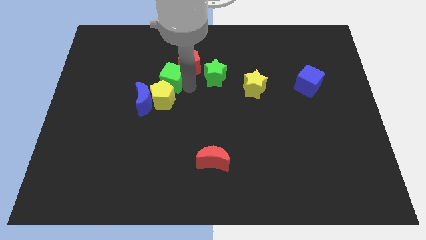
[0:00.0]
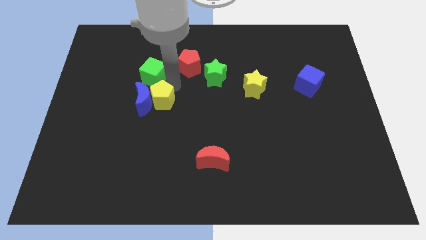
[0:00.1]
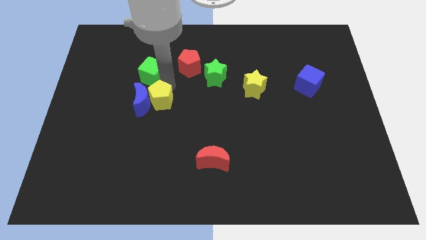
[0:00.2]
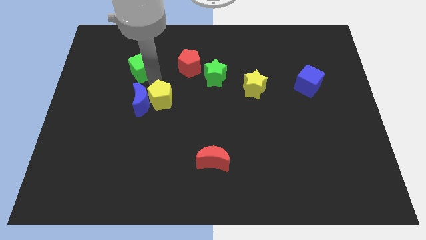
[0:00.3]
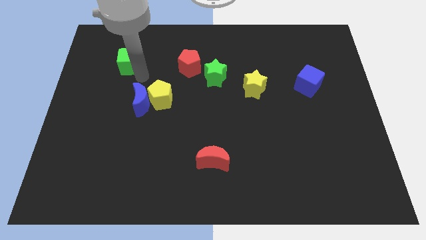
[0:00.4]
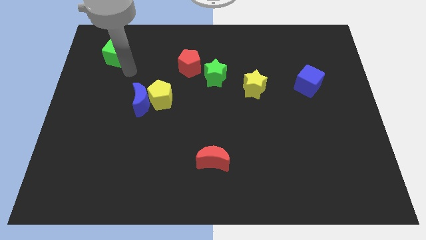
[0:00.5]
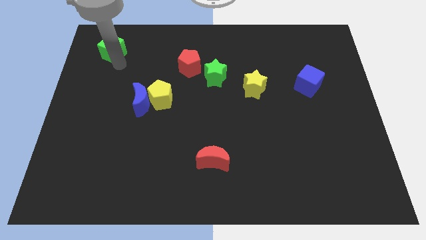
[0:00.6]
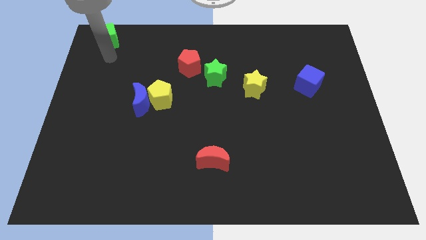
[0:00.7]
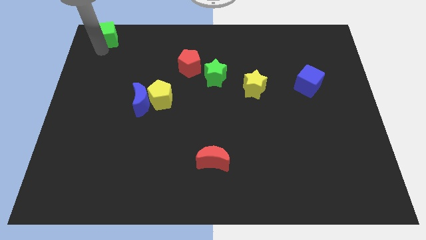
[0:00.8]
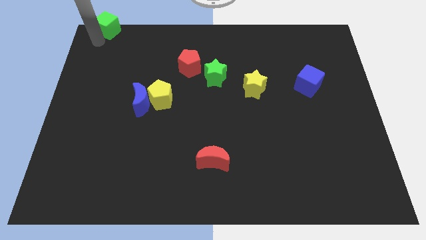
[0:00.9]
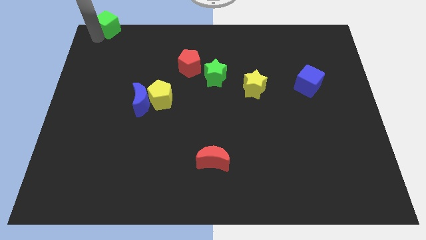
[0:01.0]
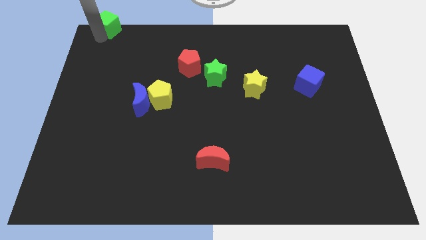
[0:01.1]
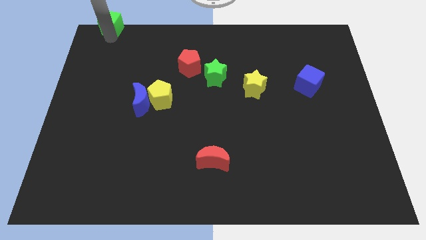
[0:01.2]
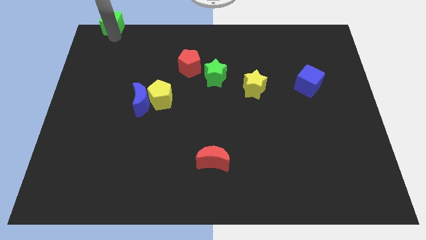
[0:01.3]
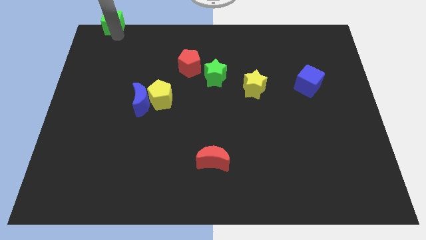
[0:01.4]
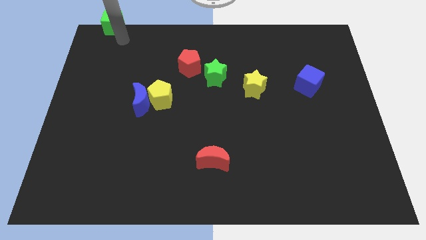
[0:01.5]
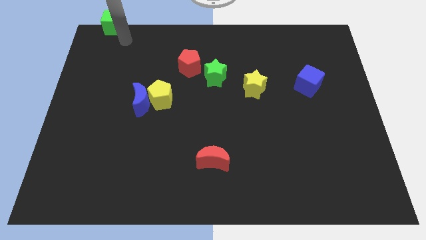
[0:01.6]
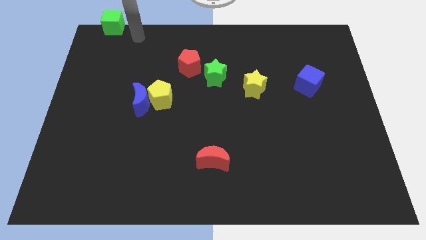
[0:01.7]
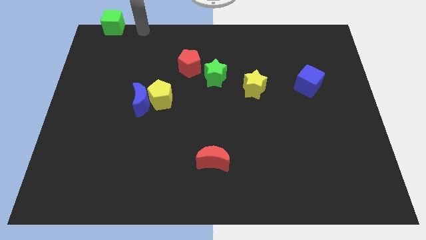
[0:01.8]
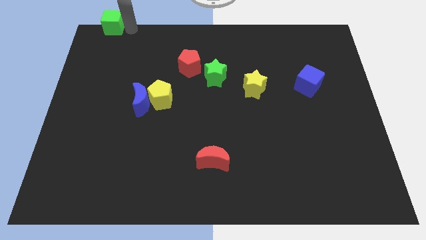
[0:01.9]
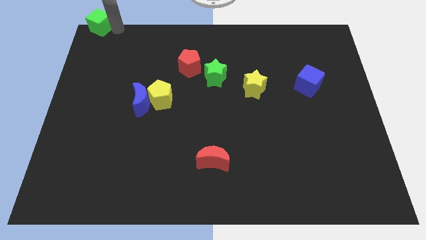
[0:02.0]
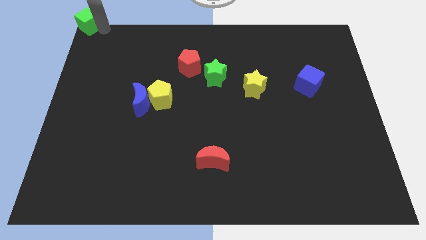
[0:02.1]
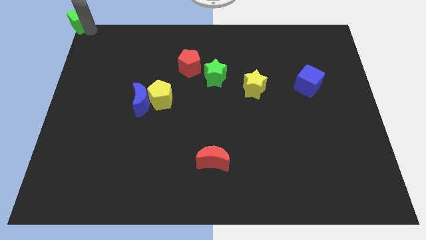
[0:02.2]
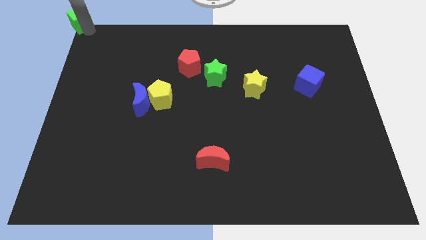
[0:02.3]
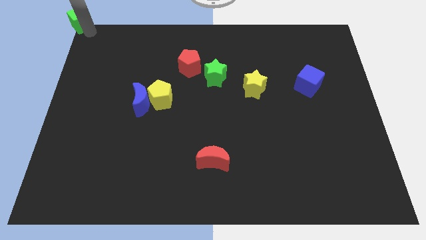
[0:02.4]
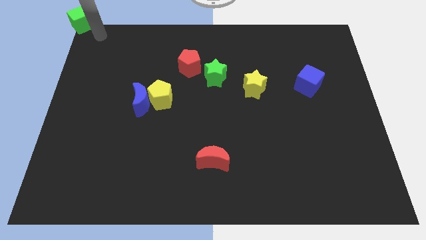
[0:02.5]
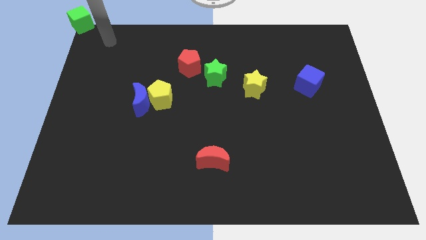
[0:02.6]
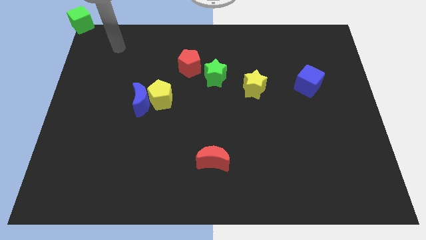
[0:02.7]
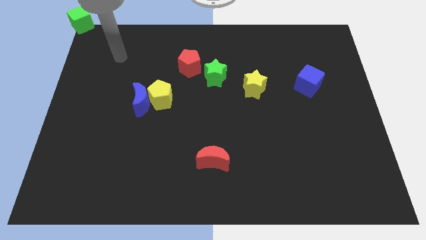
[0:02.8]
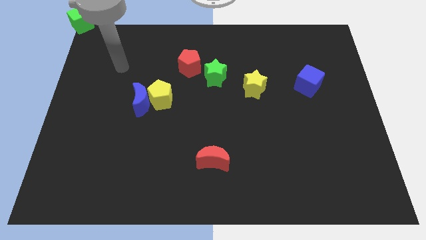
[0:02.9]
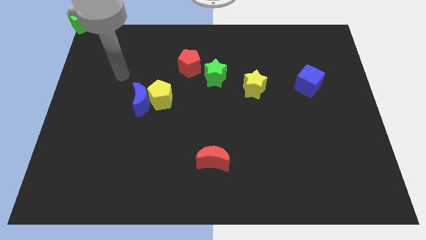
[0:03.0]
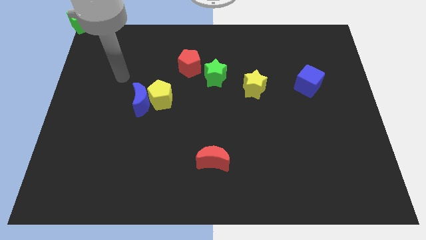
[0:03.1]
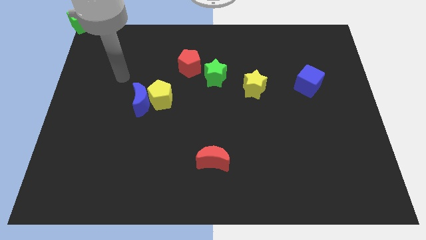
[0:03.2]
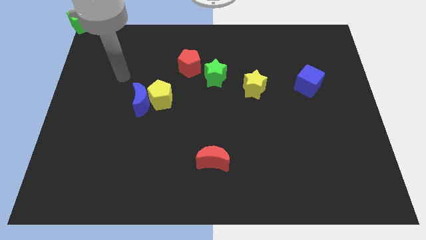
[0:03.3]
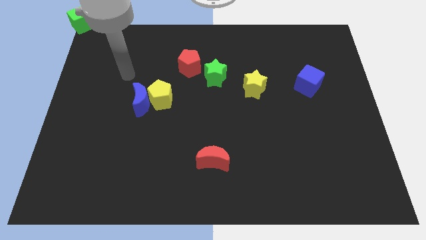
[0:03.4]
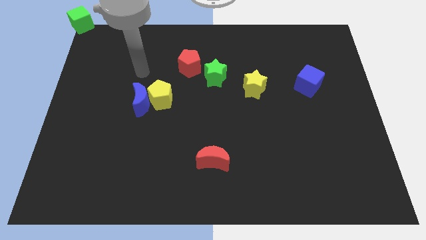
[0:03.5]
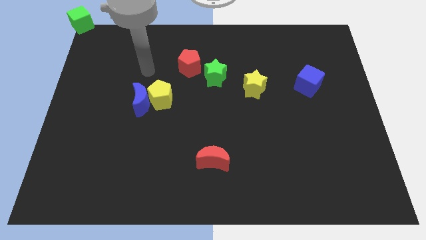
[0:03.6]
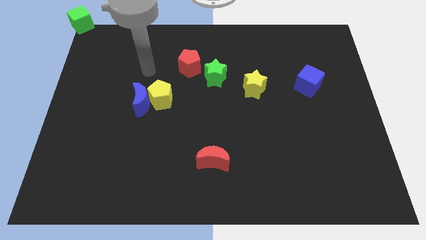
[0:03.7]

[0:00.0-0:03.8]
push the green cube to the top left corner of the board

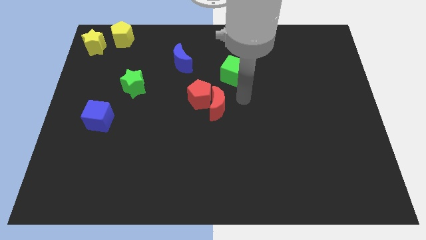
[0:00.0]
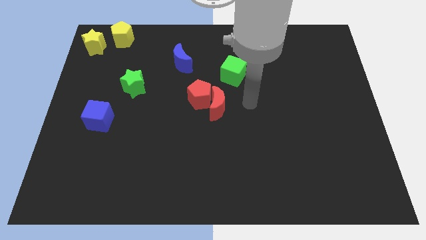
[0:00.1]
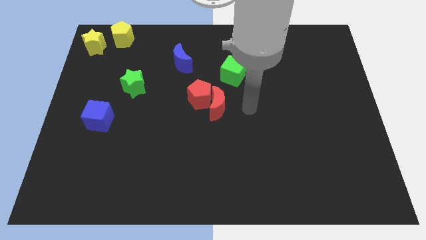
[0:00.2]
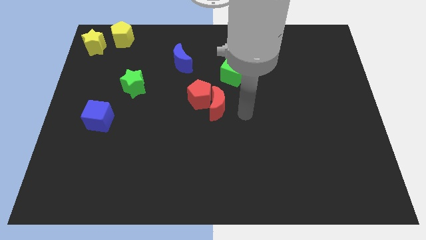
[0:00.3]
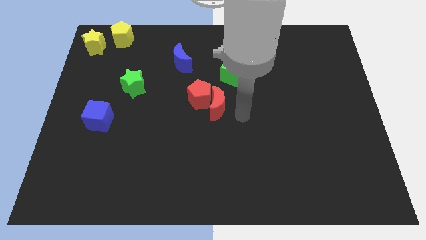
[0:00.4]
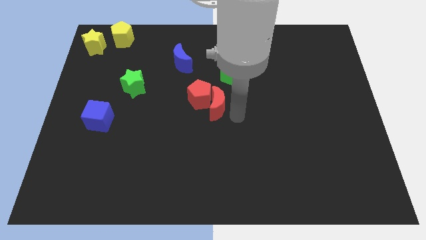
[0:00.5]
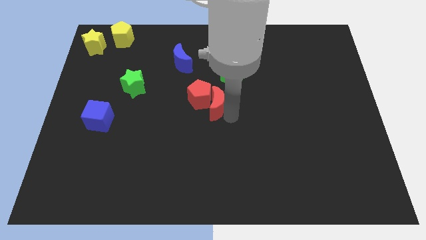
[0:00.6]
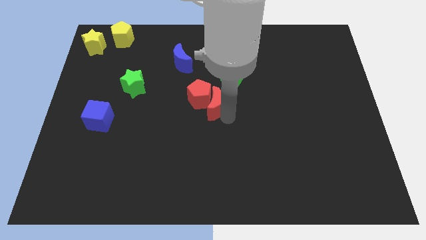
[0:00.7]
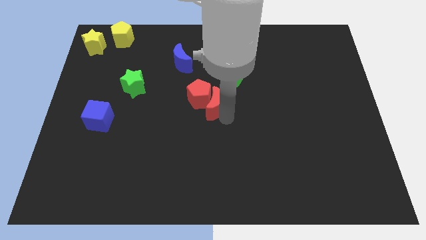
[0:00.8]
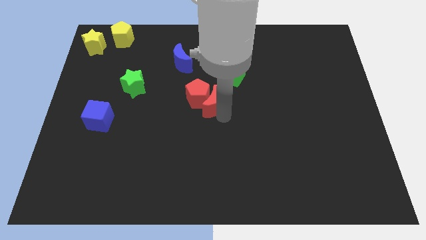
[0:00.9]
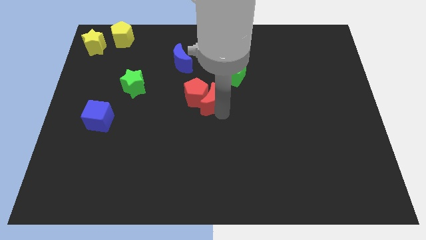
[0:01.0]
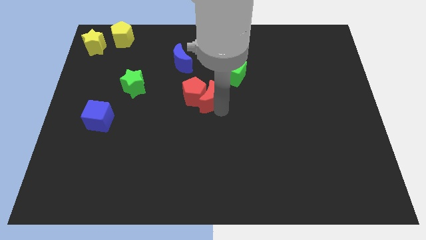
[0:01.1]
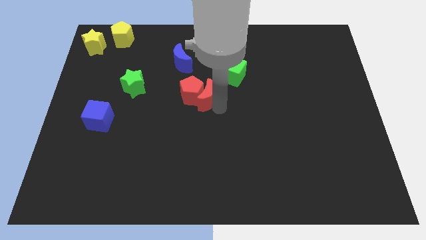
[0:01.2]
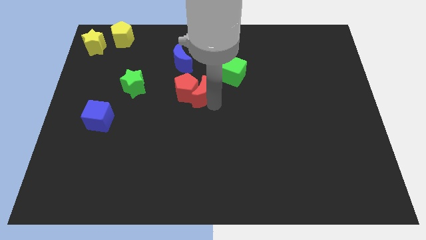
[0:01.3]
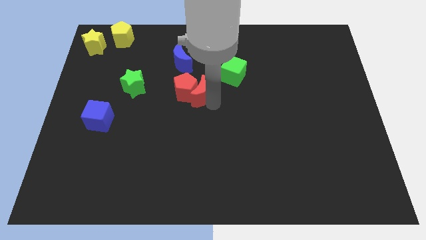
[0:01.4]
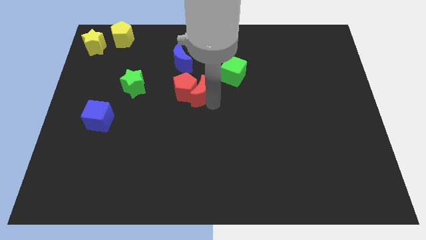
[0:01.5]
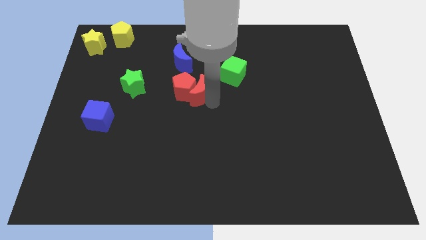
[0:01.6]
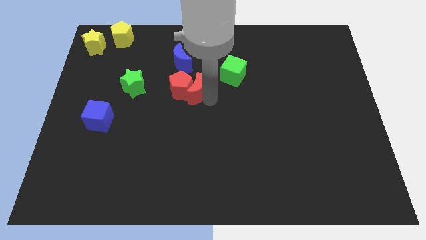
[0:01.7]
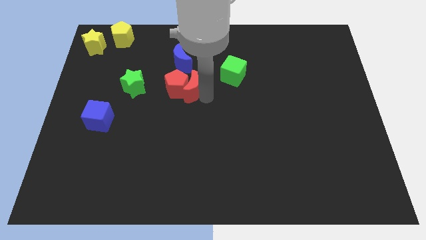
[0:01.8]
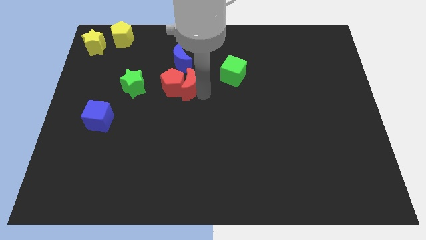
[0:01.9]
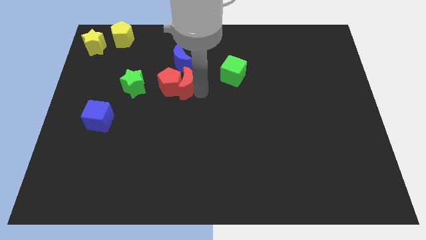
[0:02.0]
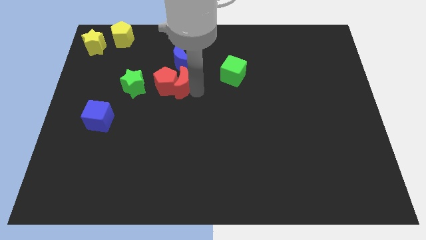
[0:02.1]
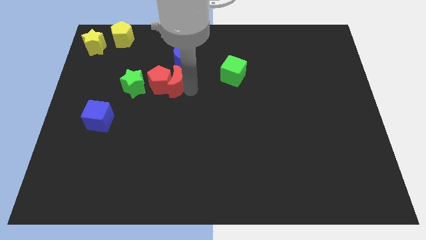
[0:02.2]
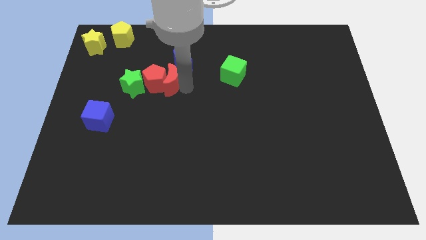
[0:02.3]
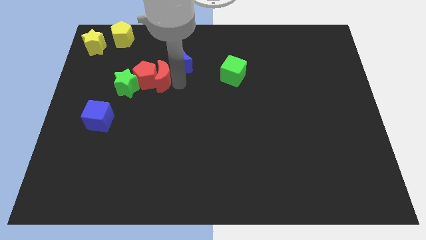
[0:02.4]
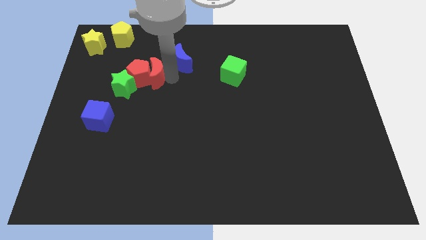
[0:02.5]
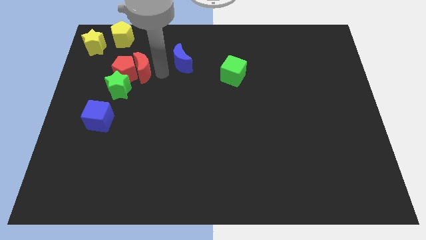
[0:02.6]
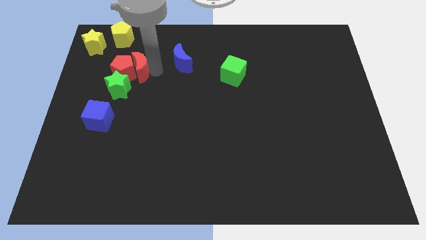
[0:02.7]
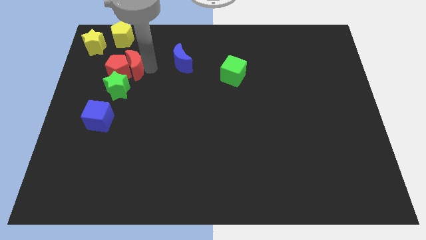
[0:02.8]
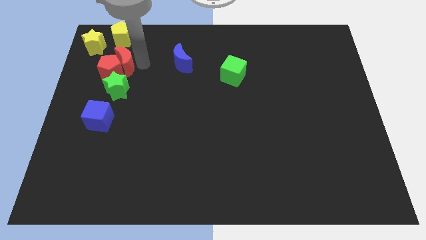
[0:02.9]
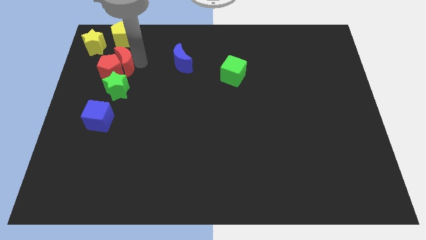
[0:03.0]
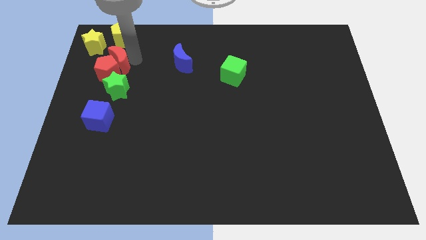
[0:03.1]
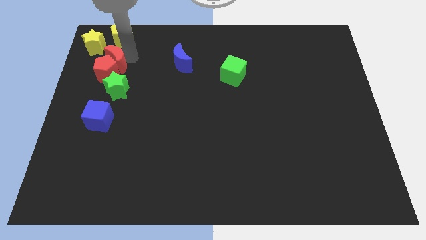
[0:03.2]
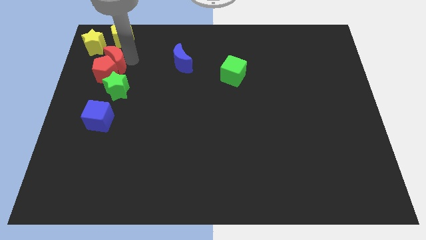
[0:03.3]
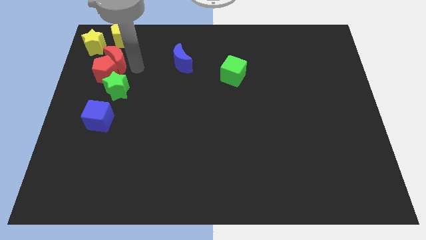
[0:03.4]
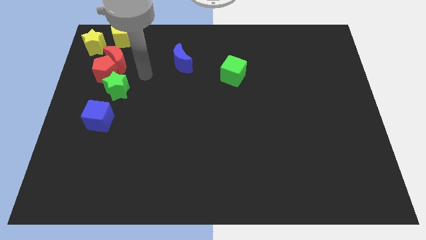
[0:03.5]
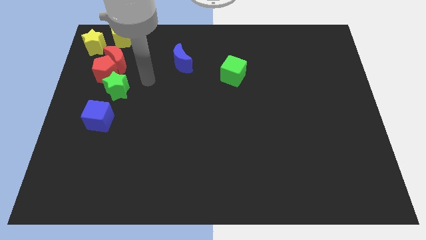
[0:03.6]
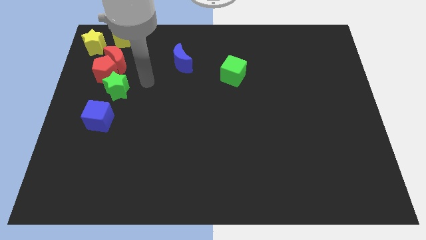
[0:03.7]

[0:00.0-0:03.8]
place the red blocks between the yellow and green star

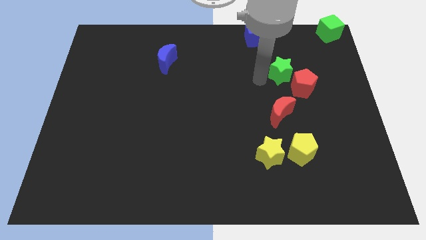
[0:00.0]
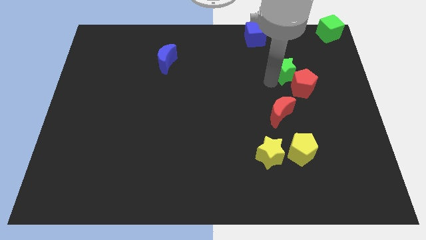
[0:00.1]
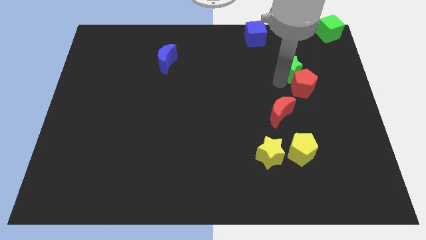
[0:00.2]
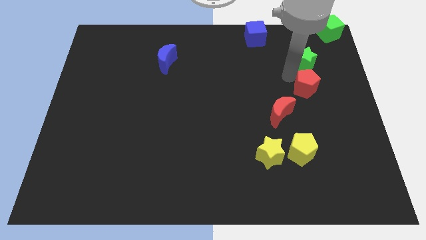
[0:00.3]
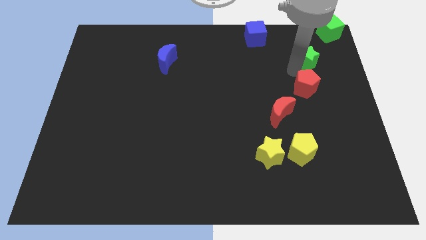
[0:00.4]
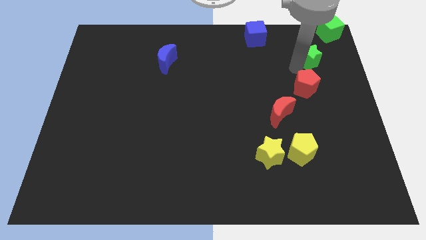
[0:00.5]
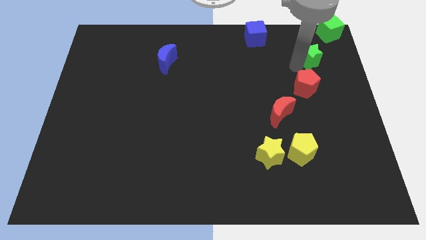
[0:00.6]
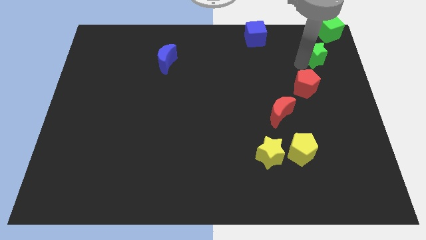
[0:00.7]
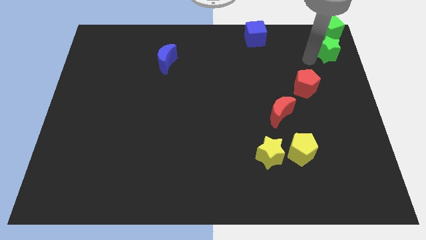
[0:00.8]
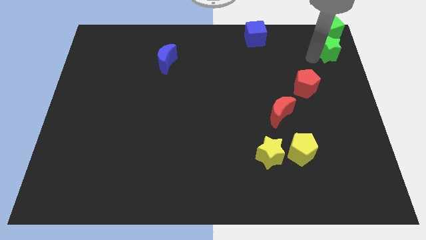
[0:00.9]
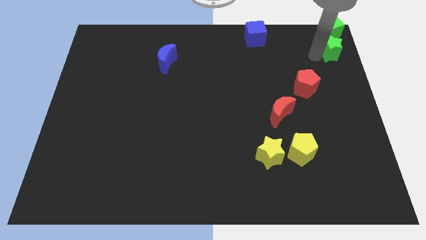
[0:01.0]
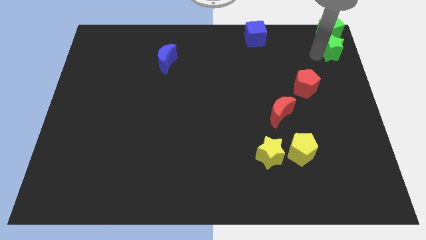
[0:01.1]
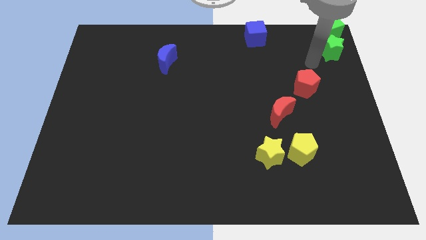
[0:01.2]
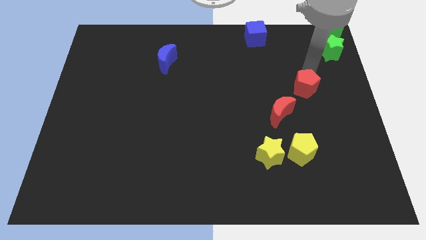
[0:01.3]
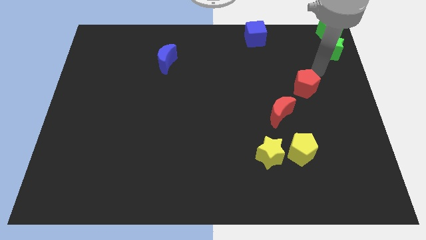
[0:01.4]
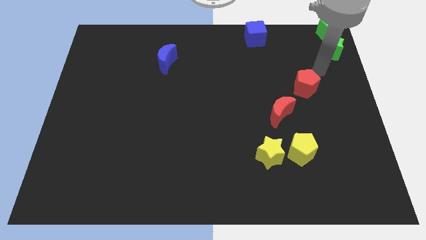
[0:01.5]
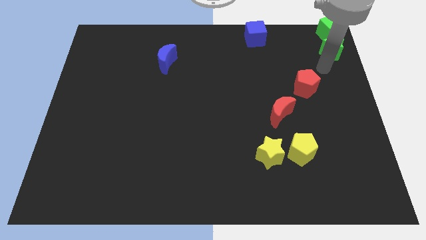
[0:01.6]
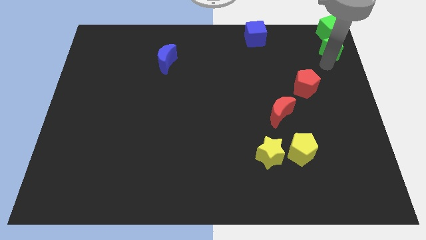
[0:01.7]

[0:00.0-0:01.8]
place the green star below the green cube
